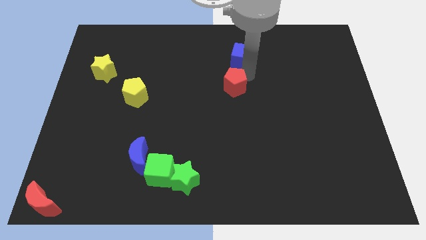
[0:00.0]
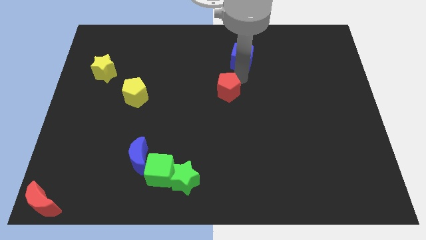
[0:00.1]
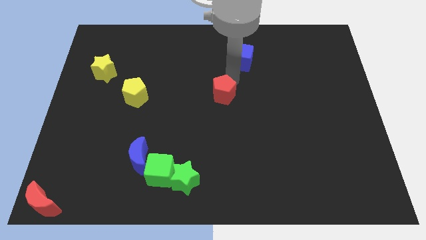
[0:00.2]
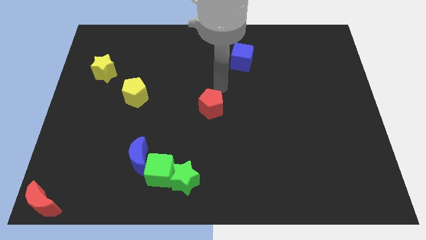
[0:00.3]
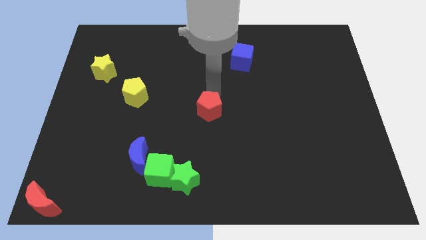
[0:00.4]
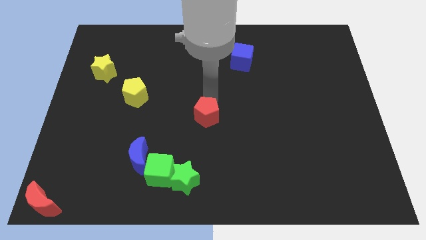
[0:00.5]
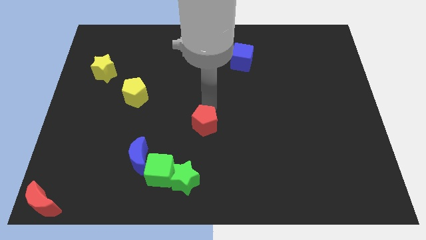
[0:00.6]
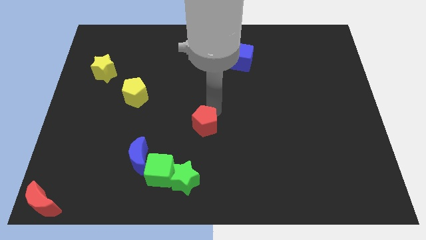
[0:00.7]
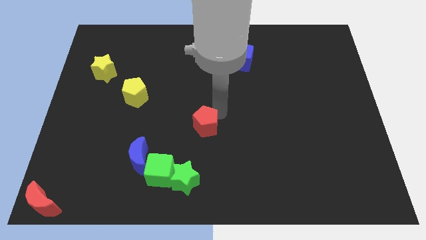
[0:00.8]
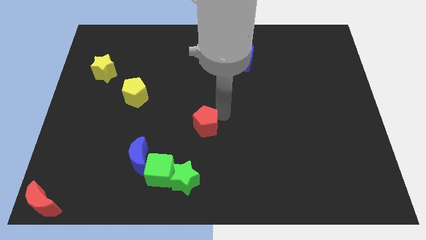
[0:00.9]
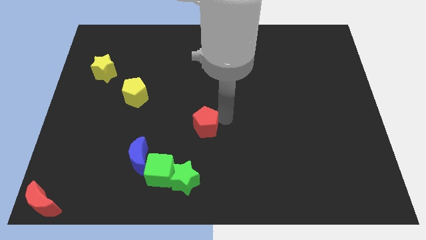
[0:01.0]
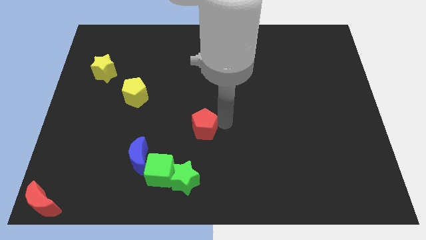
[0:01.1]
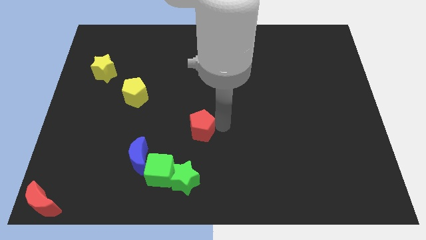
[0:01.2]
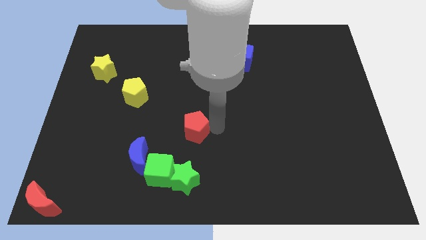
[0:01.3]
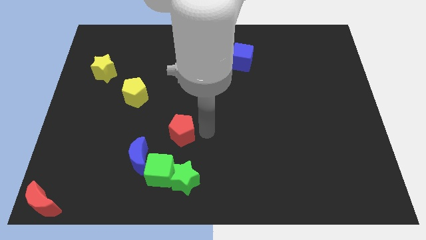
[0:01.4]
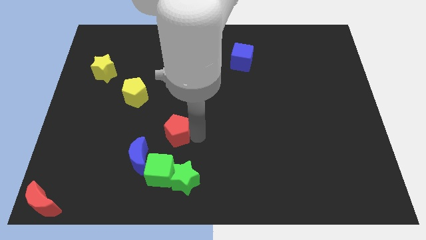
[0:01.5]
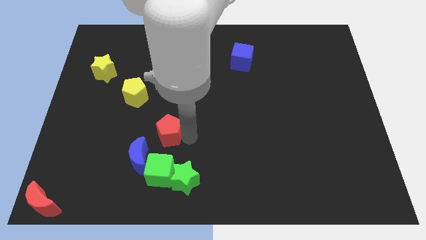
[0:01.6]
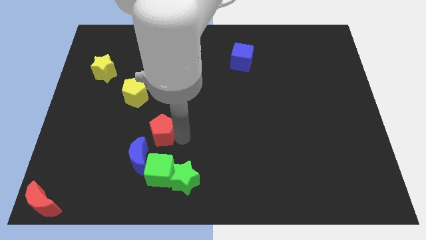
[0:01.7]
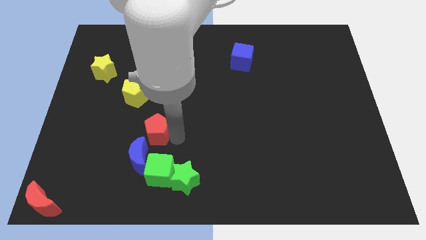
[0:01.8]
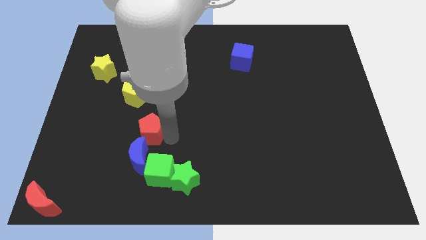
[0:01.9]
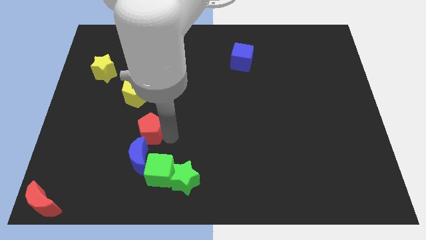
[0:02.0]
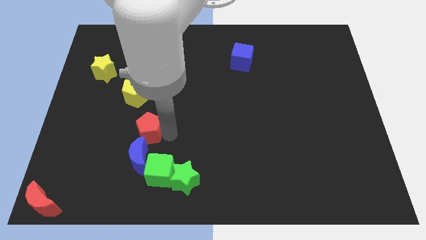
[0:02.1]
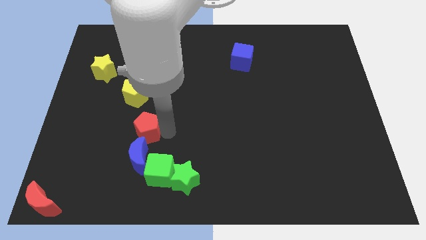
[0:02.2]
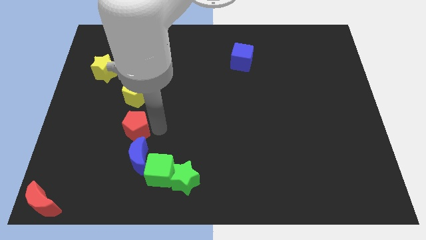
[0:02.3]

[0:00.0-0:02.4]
place the red pentagon to the top side of the blue crescent

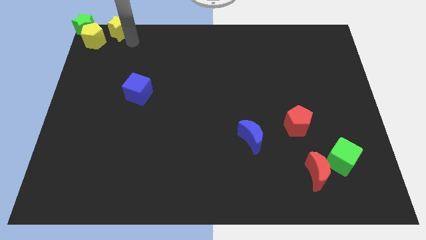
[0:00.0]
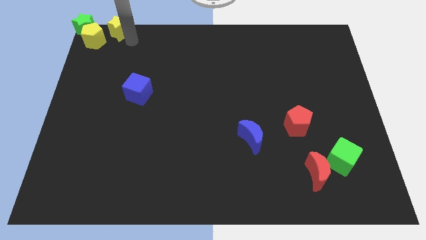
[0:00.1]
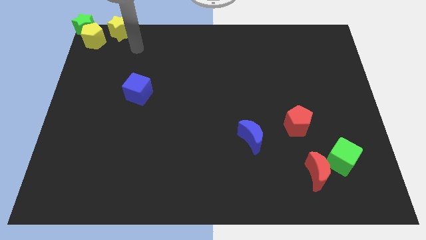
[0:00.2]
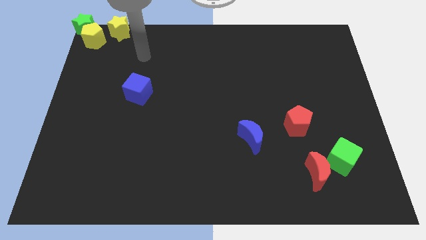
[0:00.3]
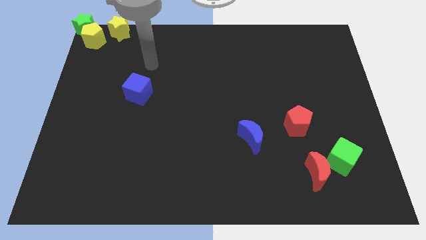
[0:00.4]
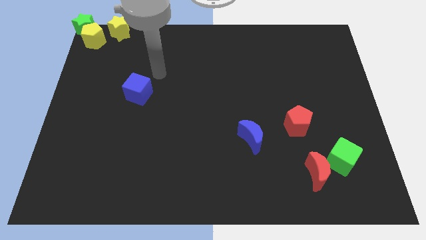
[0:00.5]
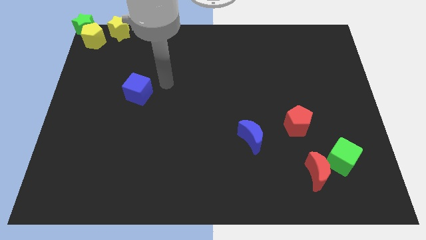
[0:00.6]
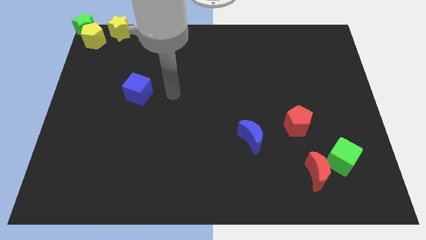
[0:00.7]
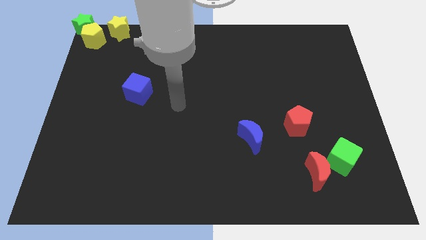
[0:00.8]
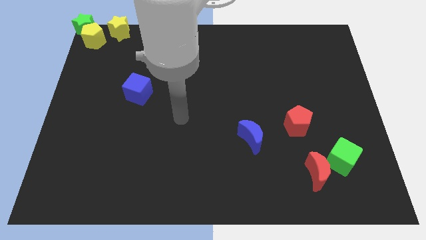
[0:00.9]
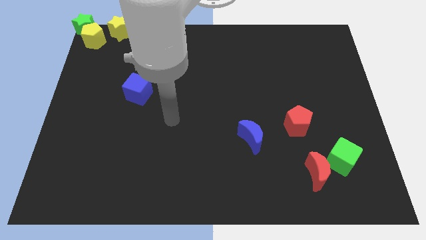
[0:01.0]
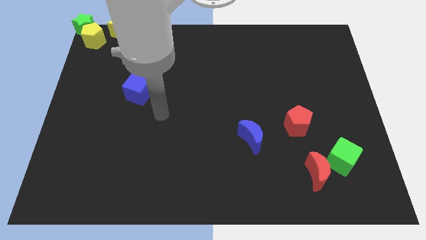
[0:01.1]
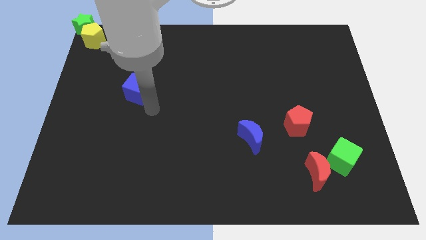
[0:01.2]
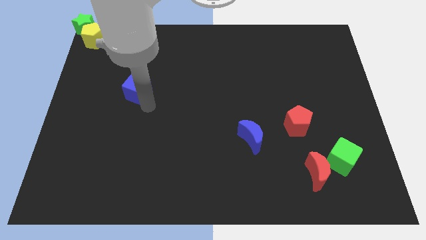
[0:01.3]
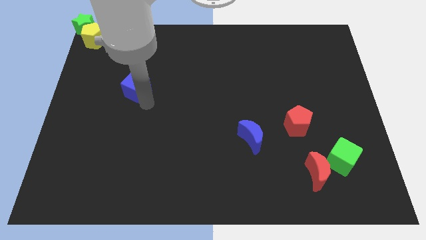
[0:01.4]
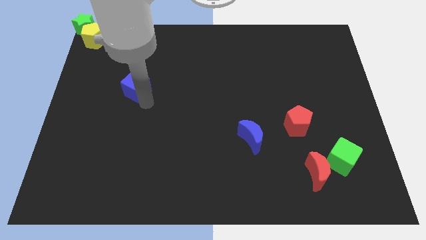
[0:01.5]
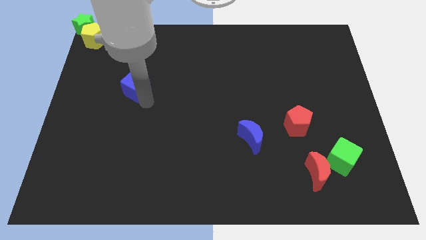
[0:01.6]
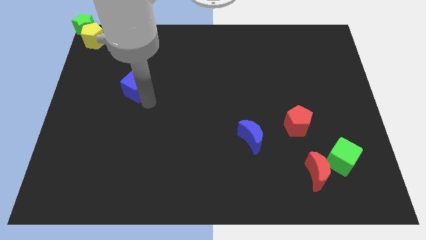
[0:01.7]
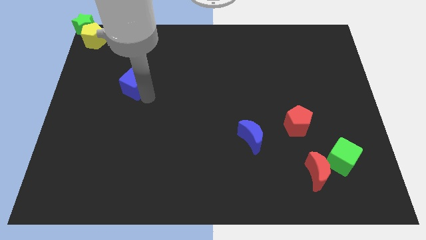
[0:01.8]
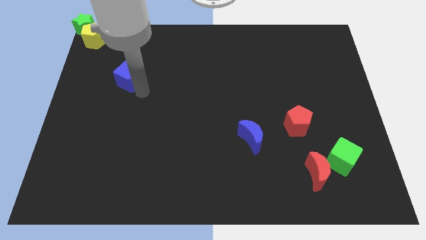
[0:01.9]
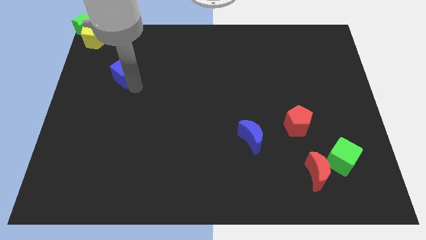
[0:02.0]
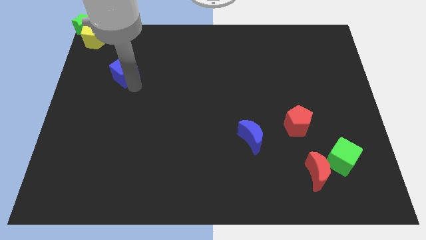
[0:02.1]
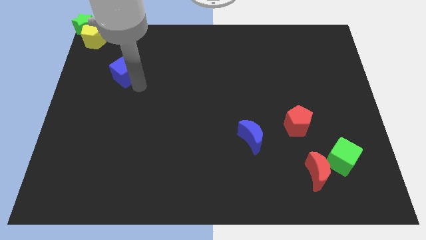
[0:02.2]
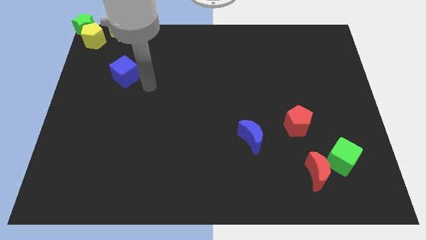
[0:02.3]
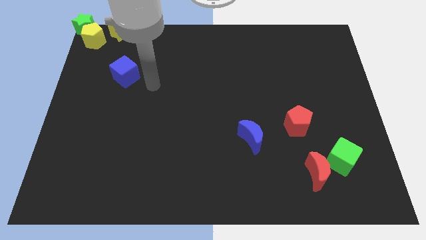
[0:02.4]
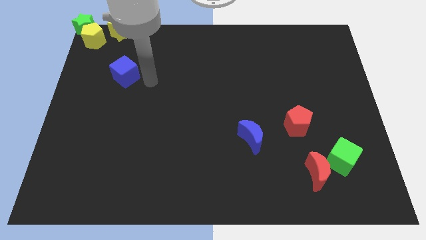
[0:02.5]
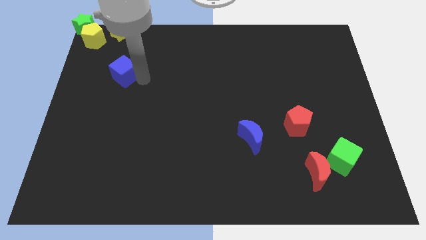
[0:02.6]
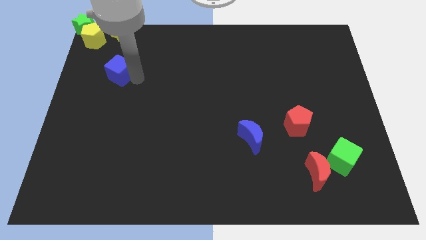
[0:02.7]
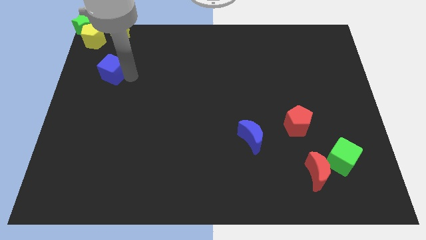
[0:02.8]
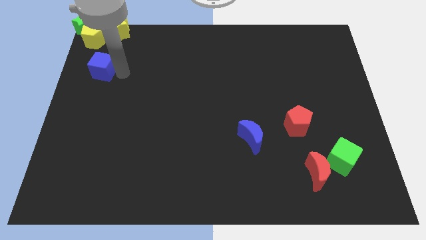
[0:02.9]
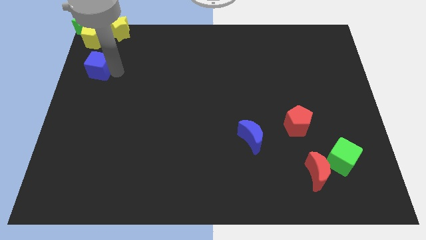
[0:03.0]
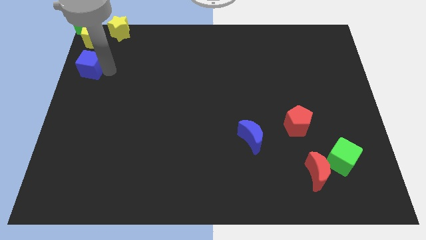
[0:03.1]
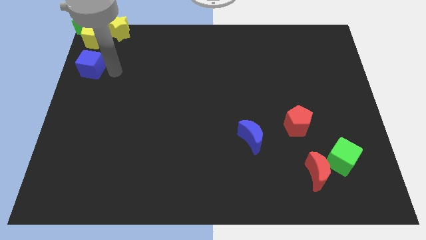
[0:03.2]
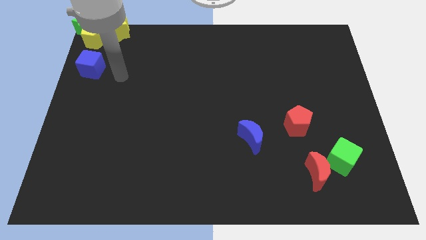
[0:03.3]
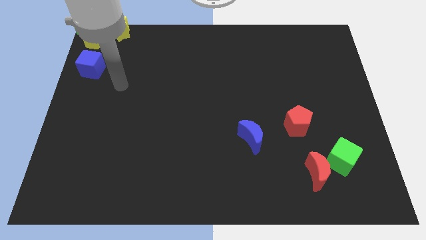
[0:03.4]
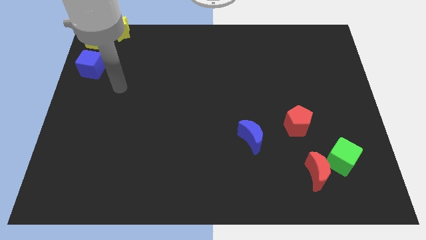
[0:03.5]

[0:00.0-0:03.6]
place blue cube to the bottom of yellow pentagon

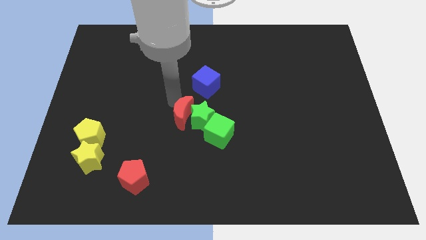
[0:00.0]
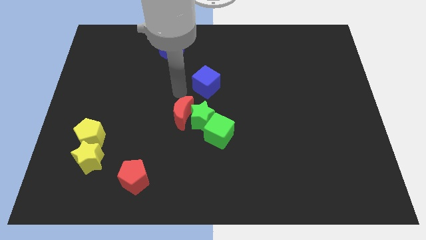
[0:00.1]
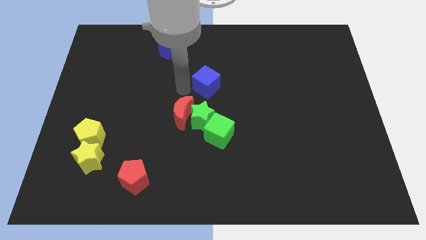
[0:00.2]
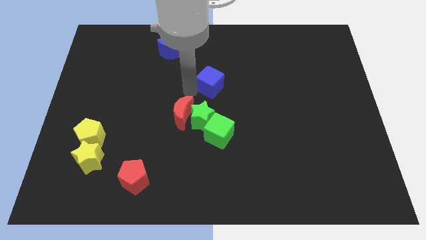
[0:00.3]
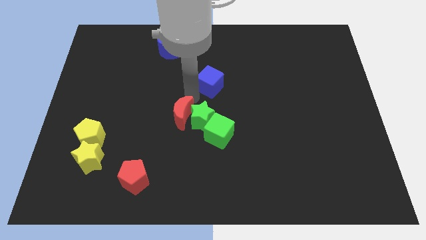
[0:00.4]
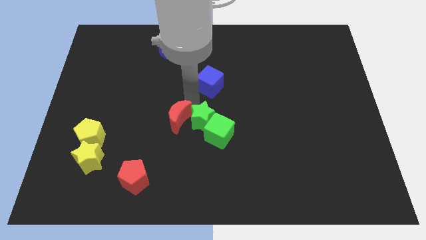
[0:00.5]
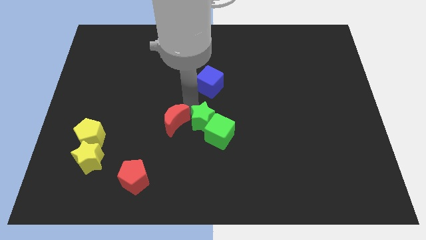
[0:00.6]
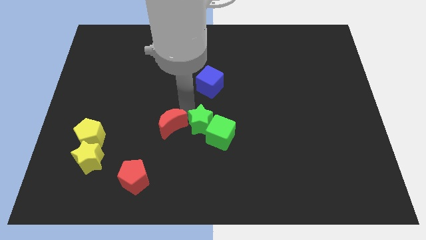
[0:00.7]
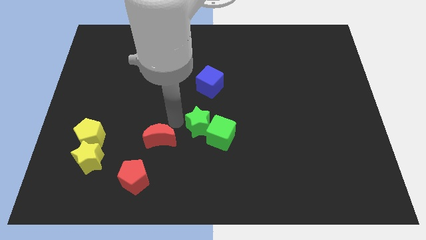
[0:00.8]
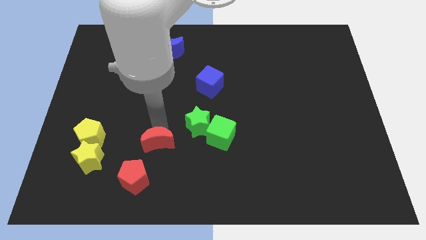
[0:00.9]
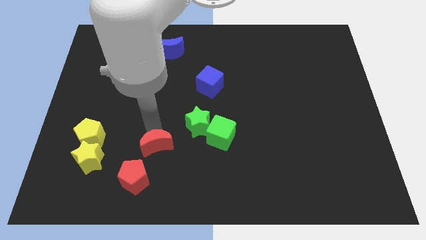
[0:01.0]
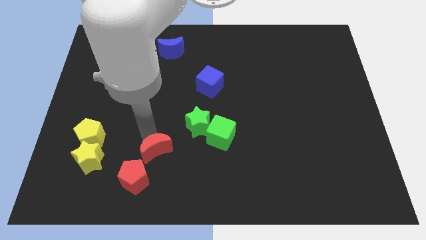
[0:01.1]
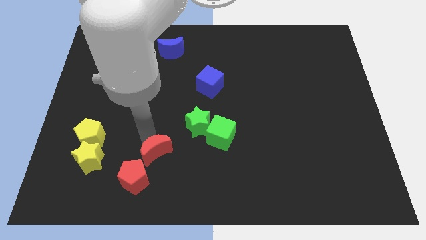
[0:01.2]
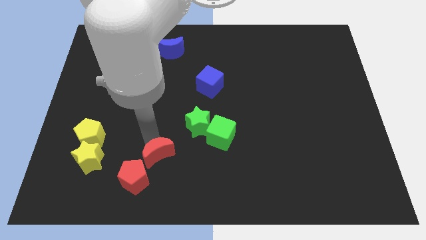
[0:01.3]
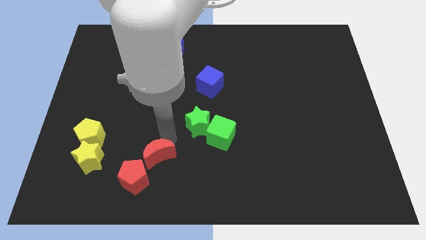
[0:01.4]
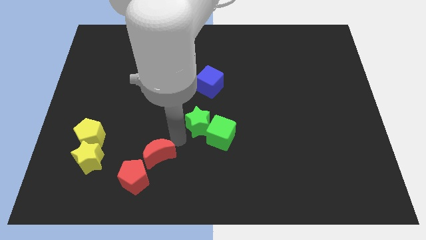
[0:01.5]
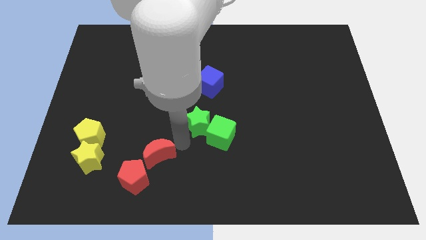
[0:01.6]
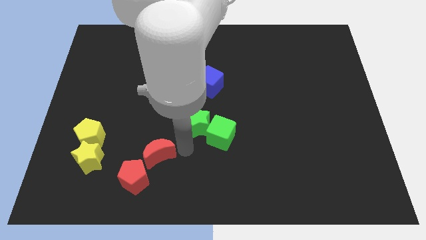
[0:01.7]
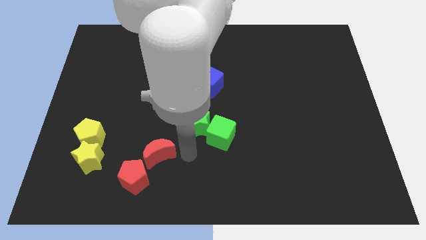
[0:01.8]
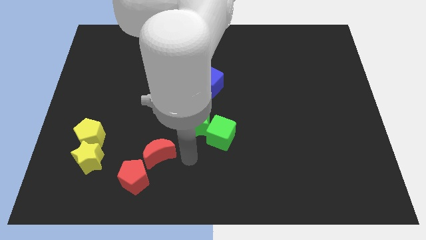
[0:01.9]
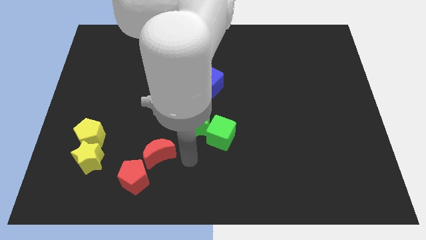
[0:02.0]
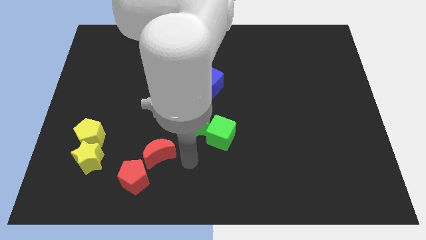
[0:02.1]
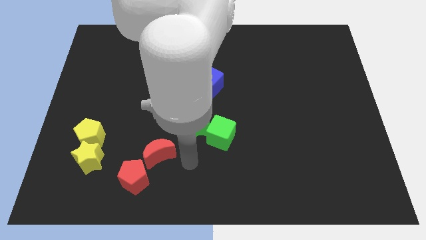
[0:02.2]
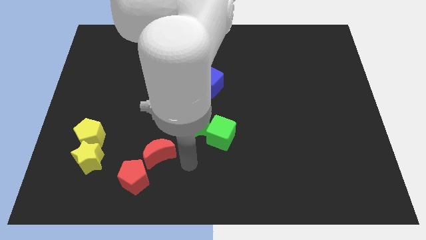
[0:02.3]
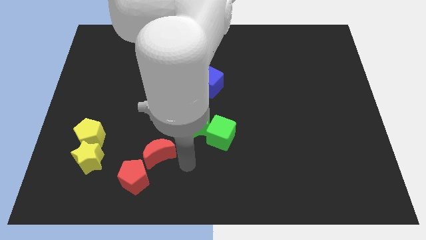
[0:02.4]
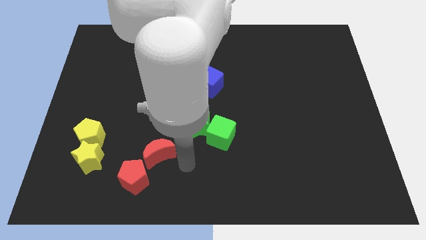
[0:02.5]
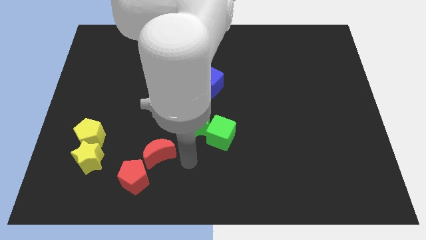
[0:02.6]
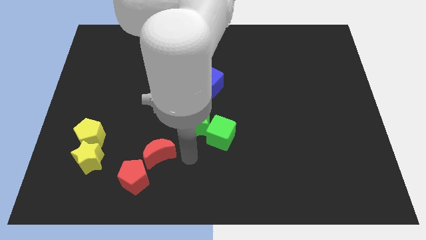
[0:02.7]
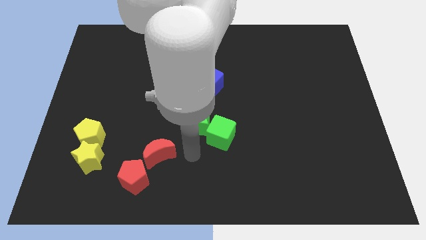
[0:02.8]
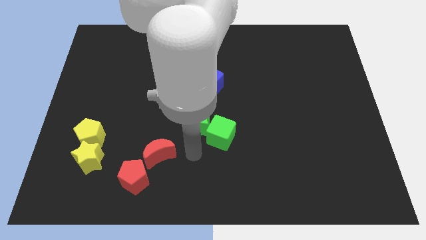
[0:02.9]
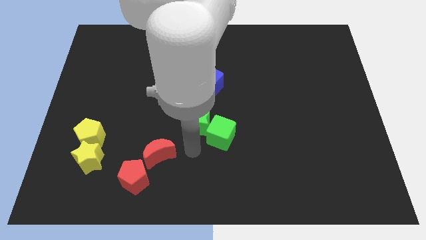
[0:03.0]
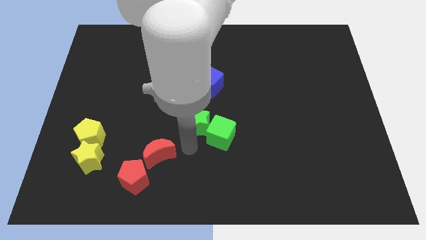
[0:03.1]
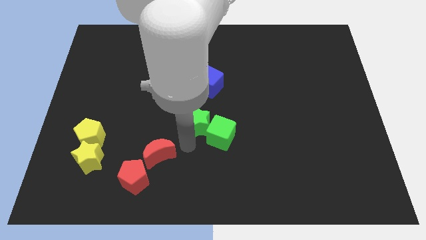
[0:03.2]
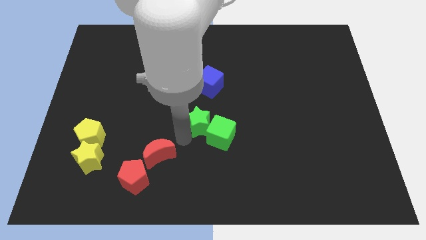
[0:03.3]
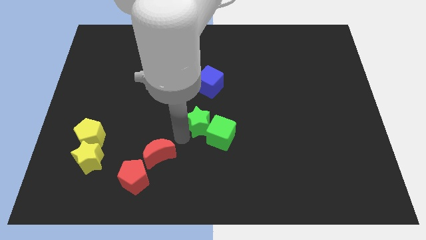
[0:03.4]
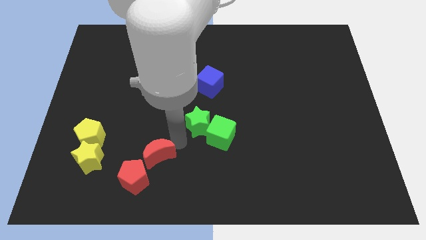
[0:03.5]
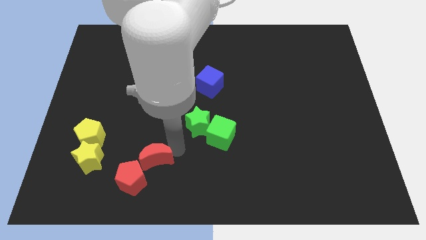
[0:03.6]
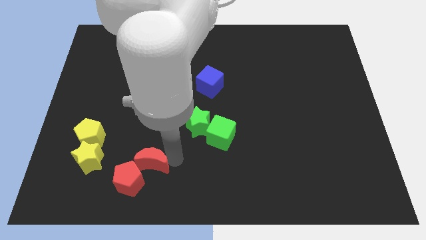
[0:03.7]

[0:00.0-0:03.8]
place red crescent towards red pentagon
